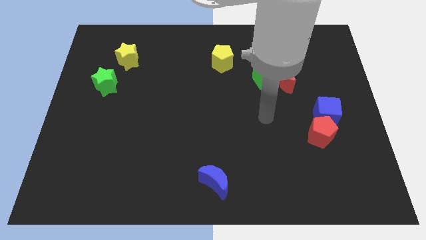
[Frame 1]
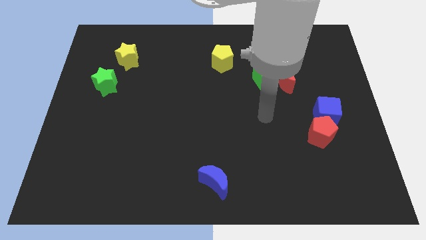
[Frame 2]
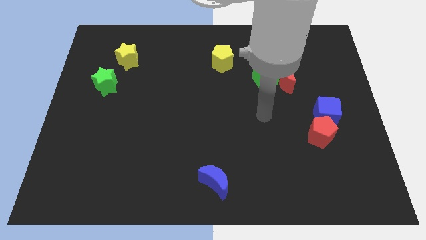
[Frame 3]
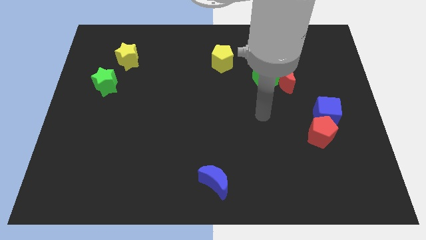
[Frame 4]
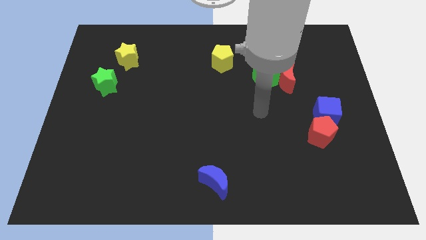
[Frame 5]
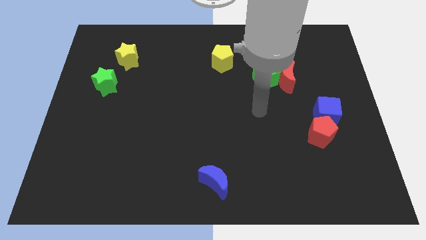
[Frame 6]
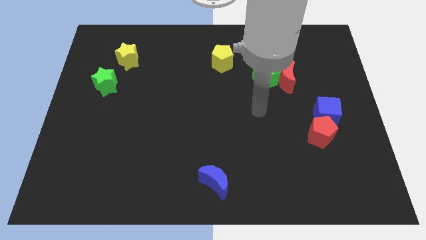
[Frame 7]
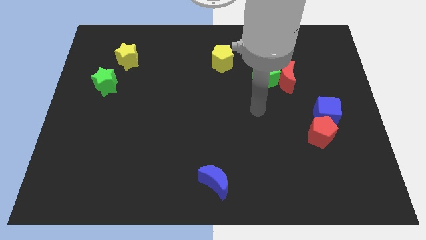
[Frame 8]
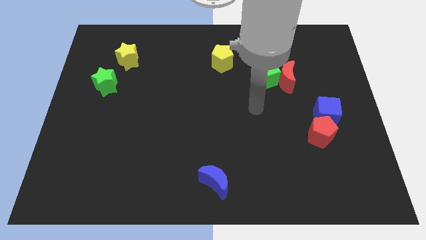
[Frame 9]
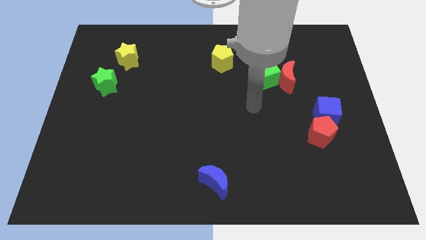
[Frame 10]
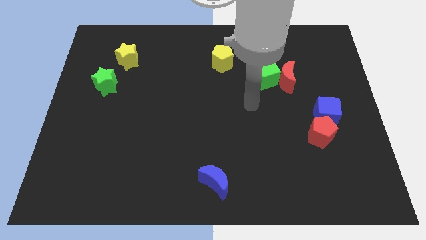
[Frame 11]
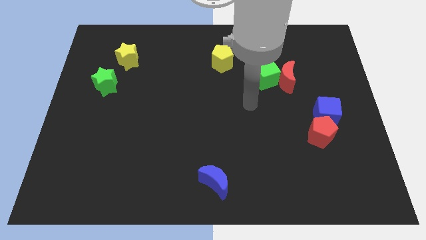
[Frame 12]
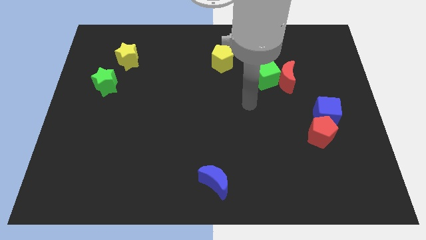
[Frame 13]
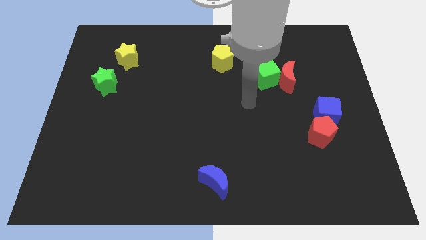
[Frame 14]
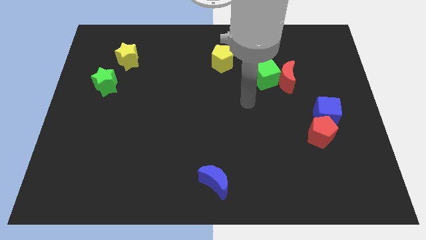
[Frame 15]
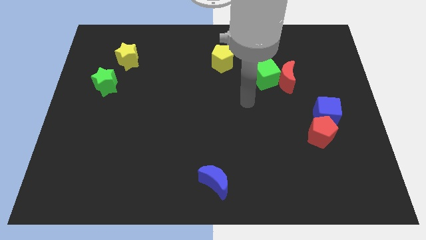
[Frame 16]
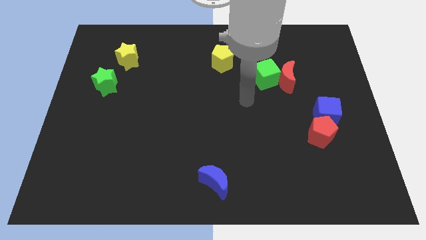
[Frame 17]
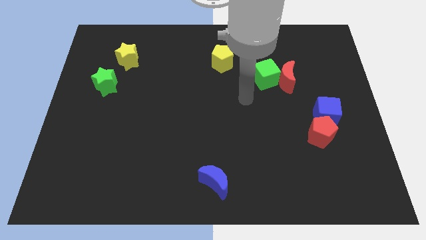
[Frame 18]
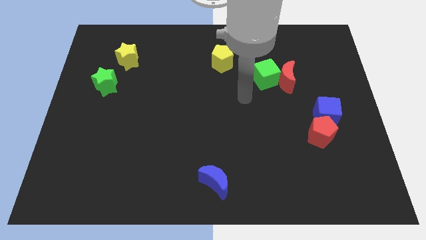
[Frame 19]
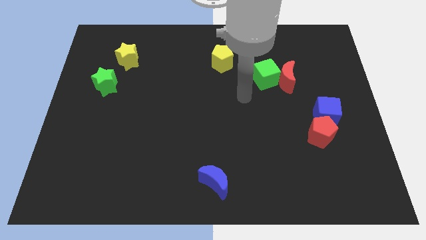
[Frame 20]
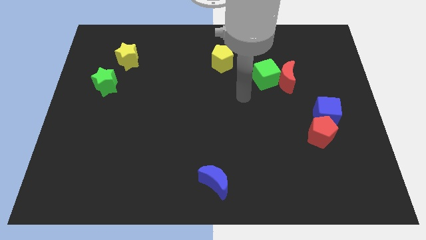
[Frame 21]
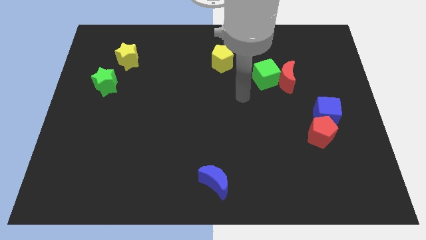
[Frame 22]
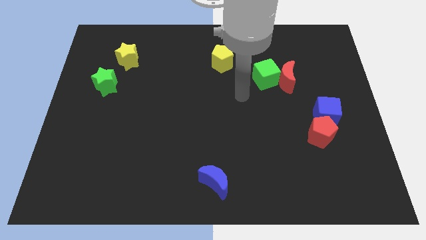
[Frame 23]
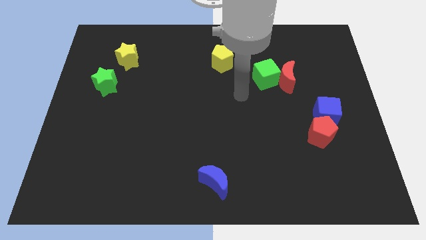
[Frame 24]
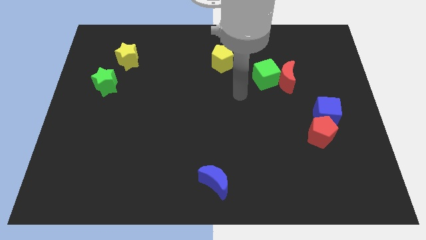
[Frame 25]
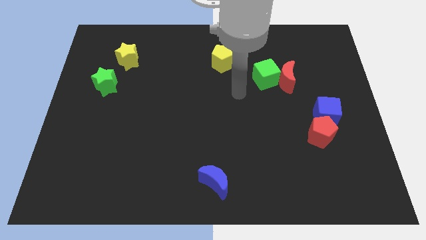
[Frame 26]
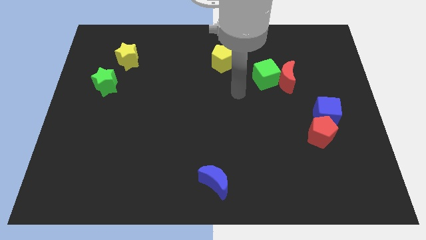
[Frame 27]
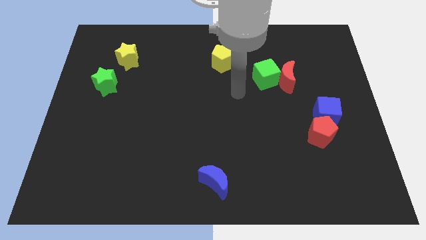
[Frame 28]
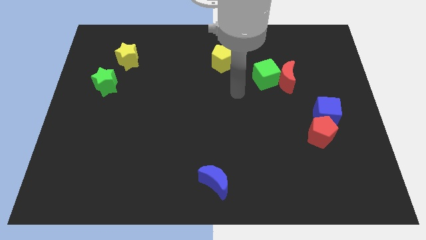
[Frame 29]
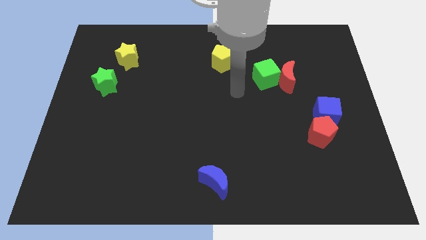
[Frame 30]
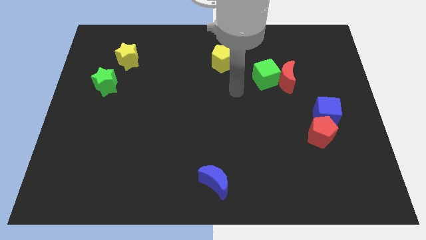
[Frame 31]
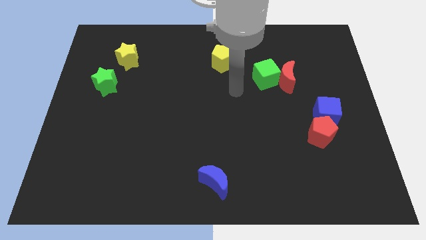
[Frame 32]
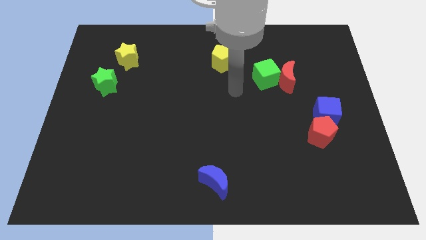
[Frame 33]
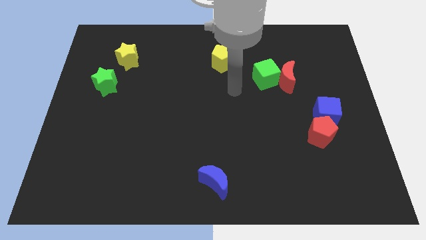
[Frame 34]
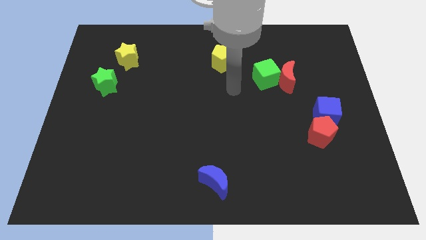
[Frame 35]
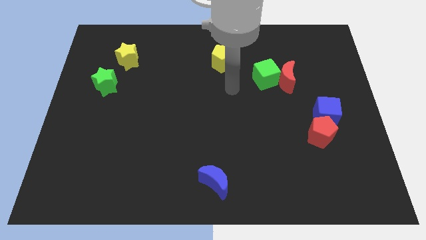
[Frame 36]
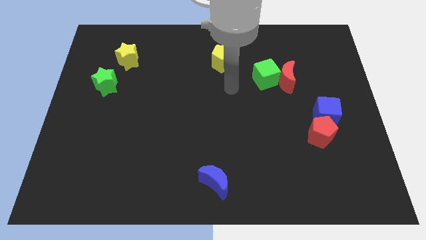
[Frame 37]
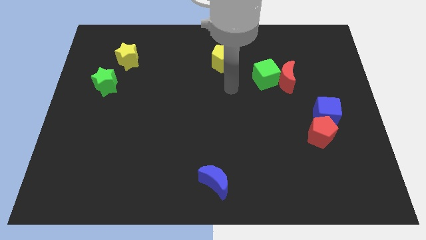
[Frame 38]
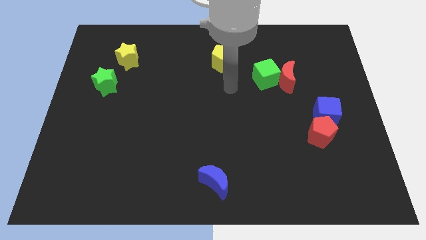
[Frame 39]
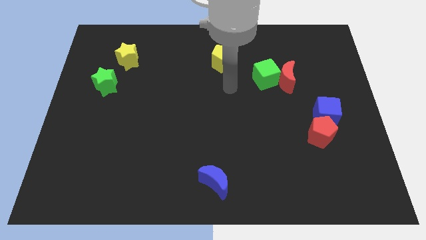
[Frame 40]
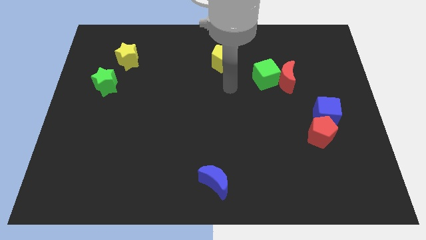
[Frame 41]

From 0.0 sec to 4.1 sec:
move your arm towardd the bottom side of the yellow pentagon

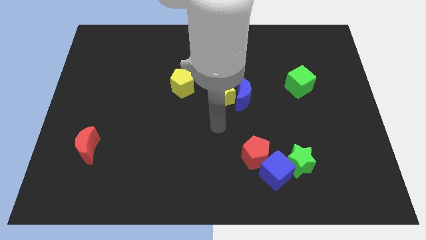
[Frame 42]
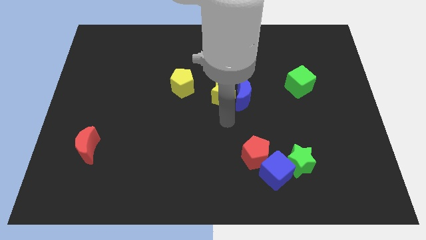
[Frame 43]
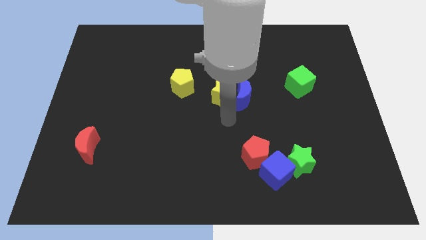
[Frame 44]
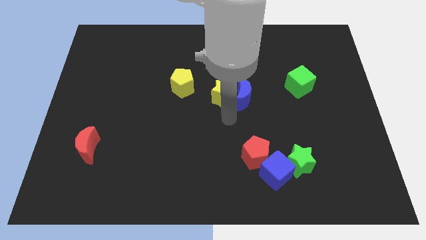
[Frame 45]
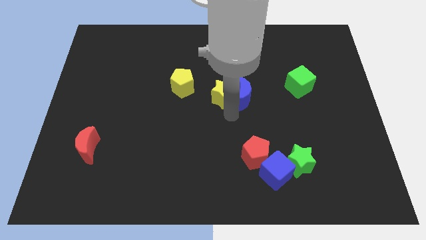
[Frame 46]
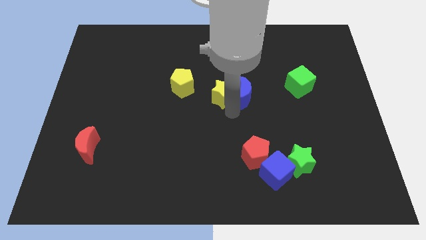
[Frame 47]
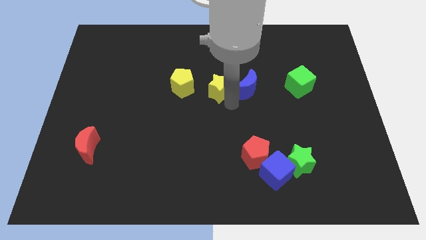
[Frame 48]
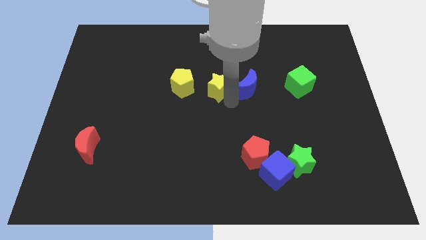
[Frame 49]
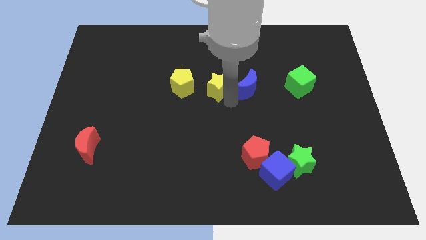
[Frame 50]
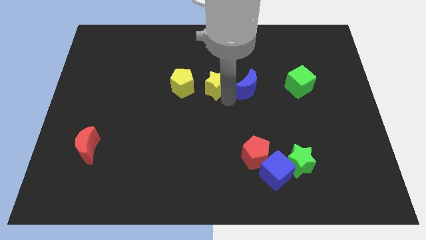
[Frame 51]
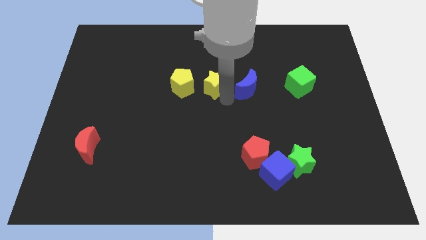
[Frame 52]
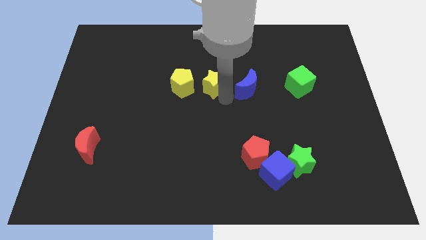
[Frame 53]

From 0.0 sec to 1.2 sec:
separate yellow star and blue moon

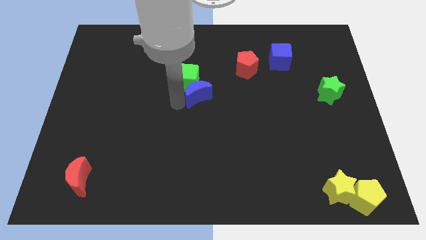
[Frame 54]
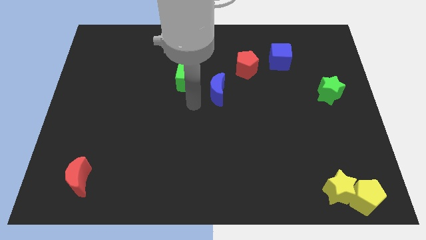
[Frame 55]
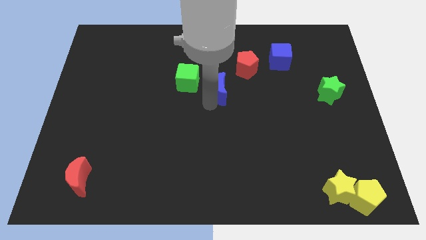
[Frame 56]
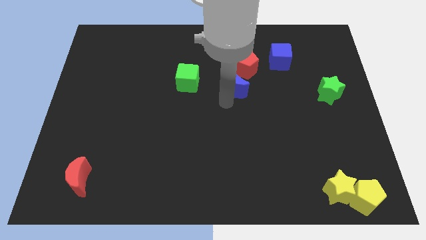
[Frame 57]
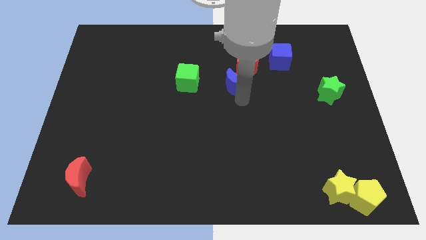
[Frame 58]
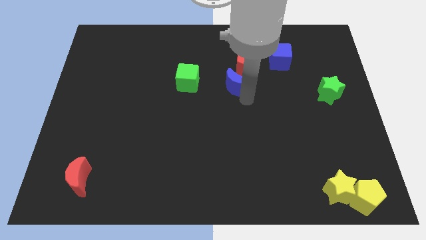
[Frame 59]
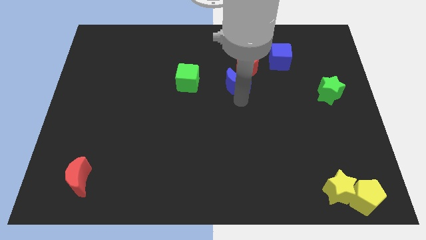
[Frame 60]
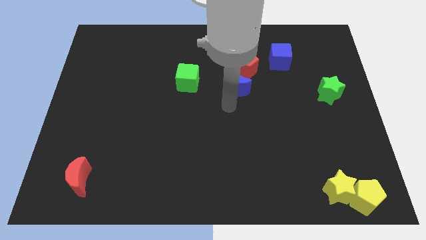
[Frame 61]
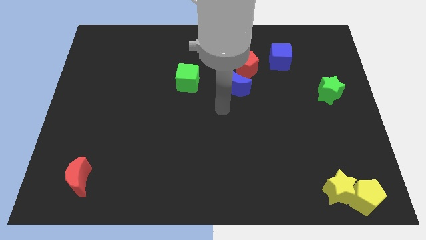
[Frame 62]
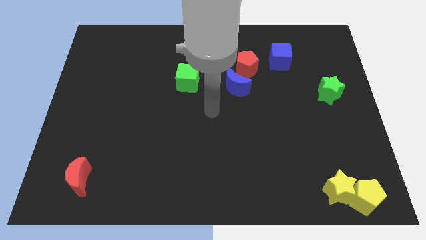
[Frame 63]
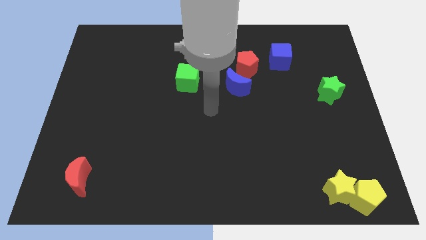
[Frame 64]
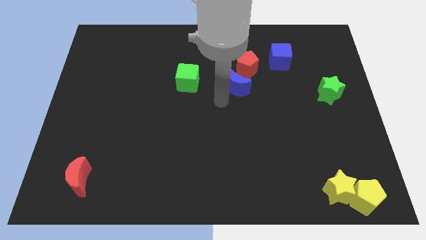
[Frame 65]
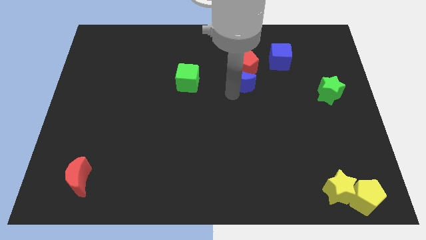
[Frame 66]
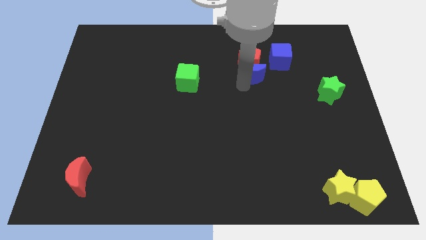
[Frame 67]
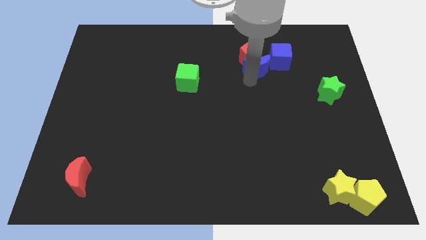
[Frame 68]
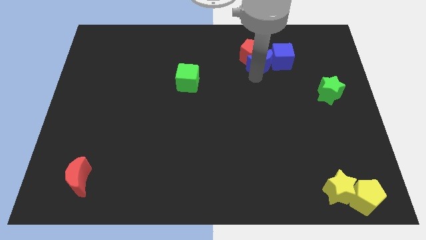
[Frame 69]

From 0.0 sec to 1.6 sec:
push the blue moon into the red pentagon

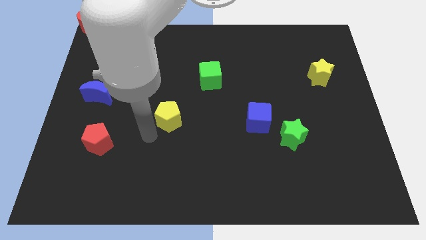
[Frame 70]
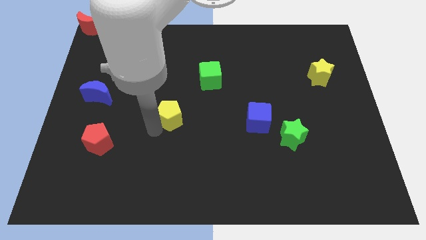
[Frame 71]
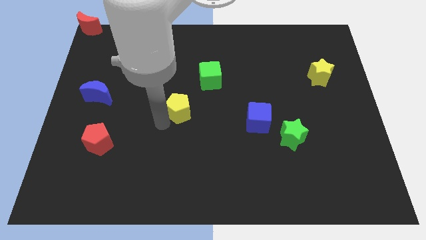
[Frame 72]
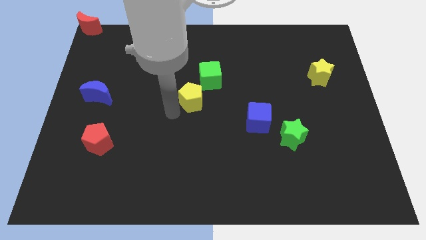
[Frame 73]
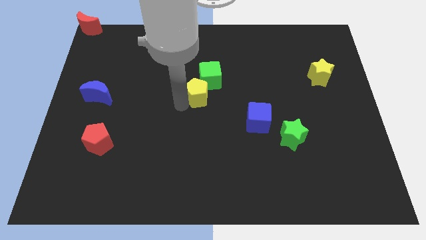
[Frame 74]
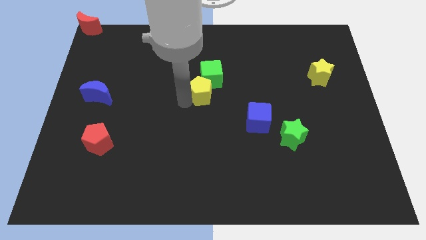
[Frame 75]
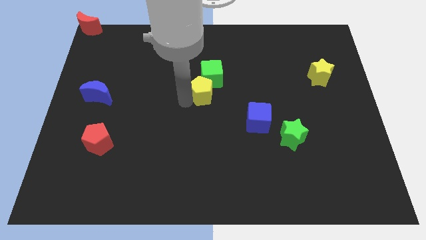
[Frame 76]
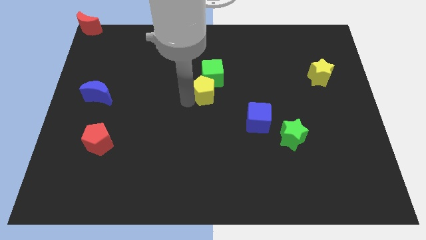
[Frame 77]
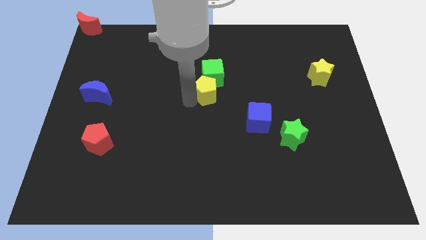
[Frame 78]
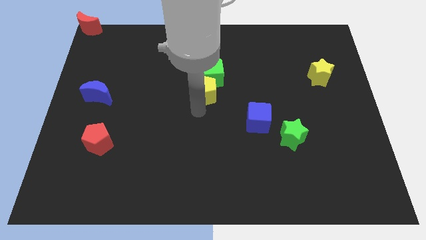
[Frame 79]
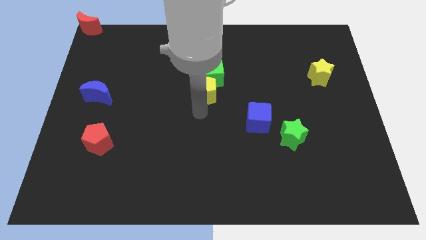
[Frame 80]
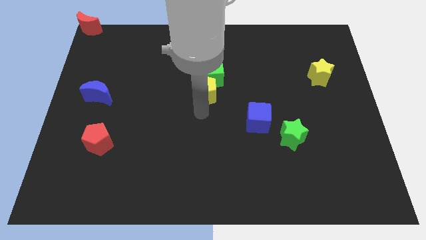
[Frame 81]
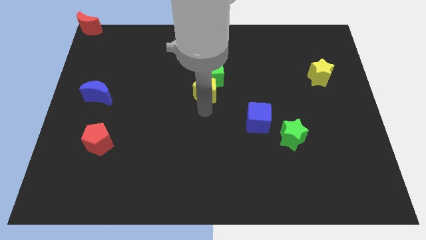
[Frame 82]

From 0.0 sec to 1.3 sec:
make the yellow pentagon to touch the bottom side of the green cube

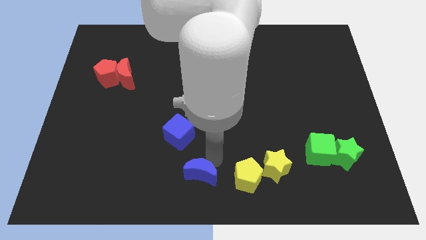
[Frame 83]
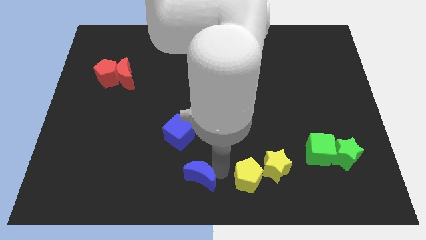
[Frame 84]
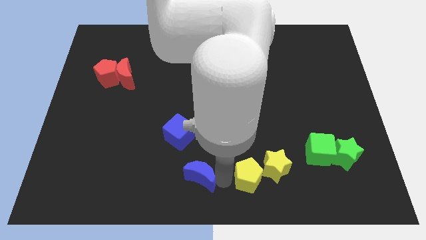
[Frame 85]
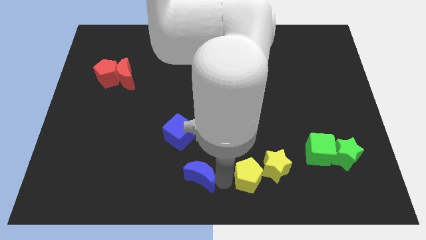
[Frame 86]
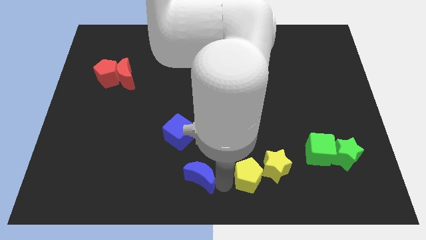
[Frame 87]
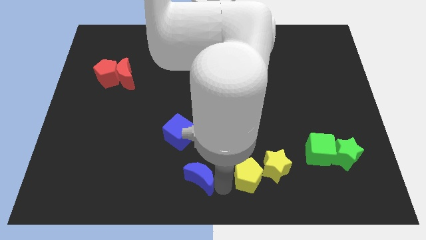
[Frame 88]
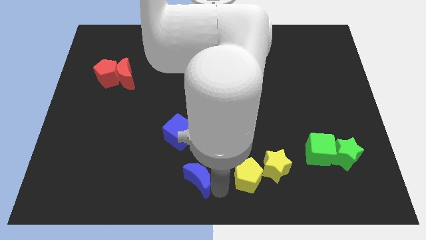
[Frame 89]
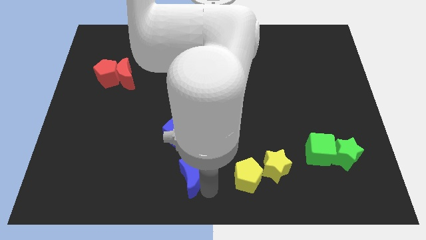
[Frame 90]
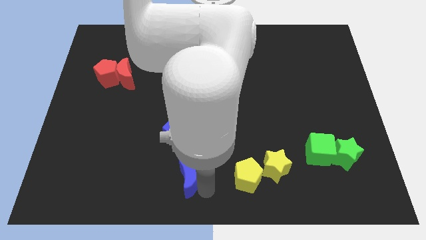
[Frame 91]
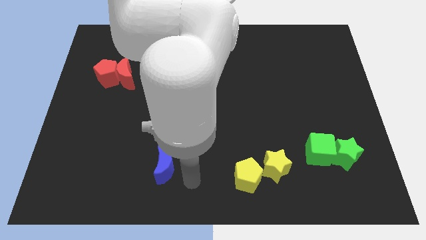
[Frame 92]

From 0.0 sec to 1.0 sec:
put the blue crescent at the bottom side of the blue cube
